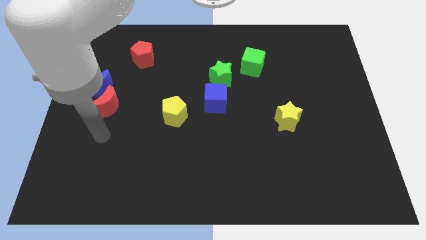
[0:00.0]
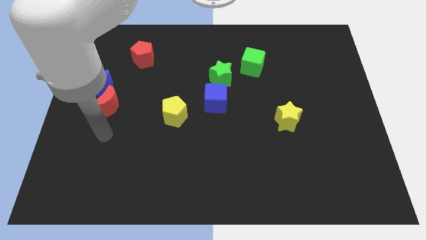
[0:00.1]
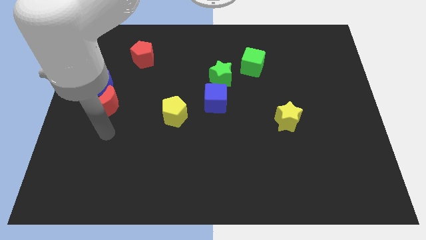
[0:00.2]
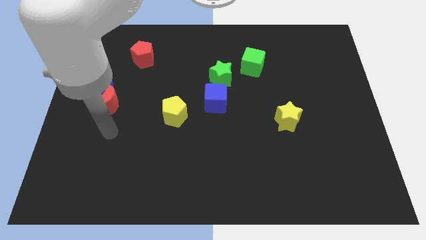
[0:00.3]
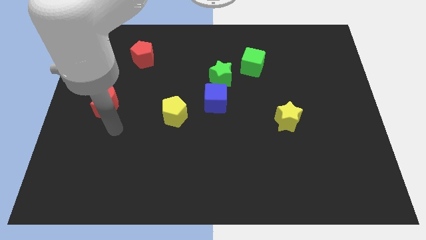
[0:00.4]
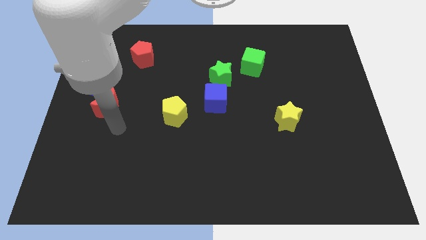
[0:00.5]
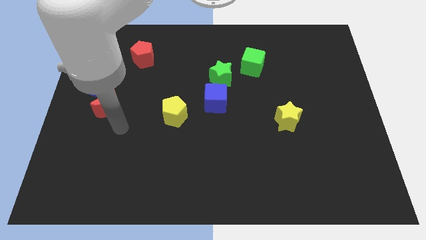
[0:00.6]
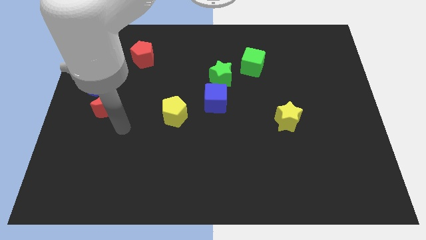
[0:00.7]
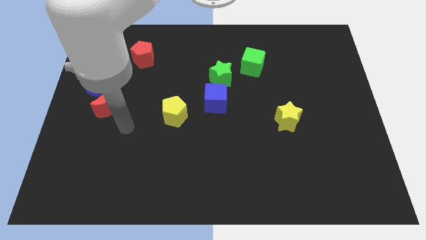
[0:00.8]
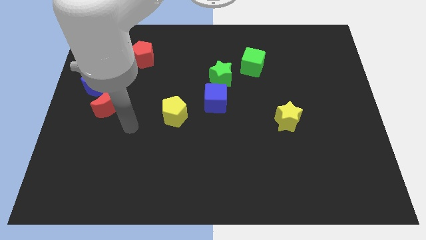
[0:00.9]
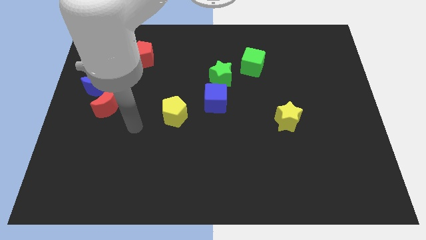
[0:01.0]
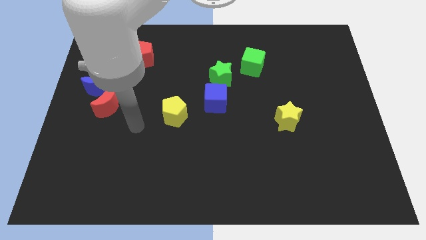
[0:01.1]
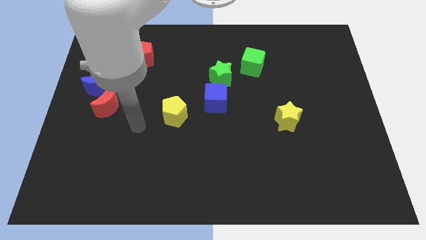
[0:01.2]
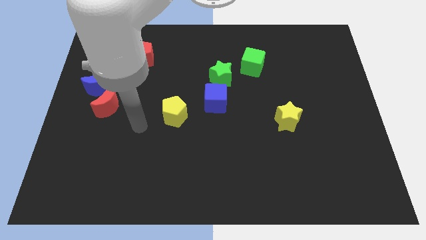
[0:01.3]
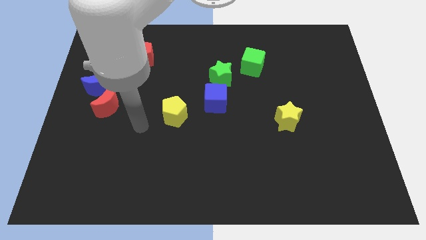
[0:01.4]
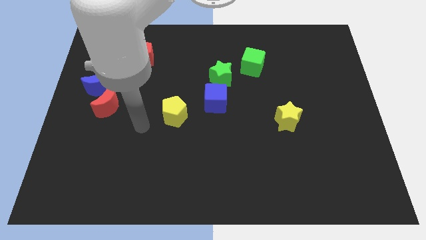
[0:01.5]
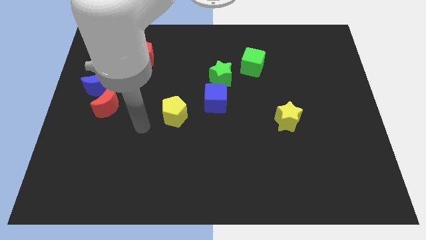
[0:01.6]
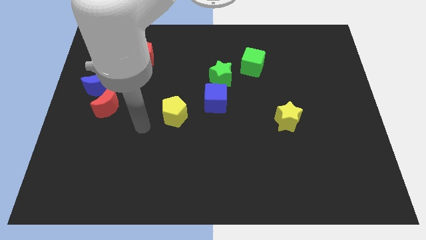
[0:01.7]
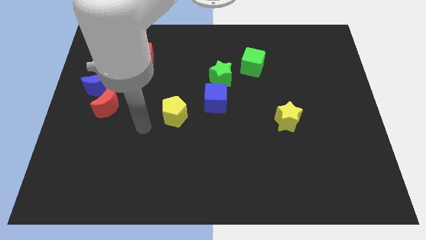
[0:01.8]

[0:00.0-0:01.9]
move the arm towards the yellow pentagon

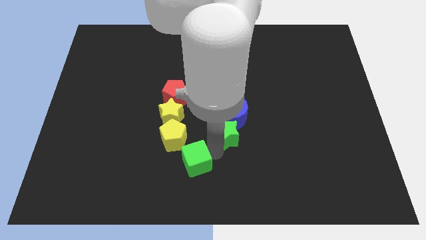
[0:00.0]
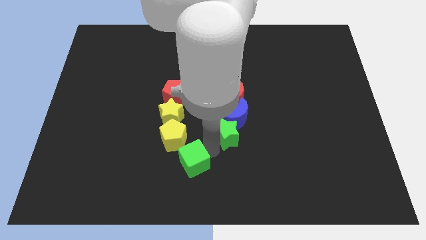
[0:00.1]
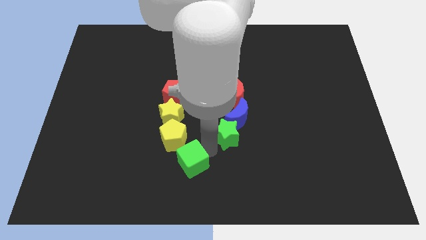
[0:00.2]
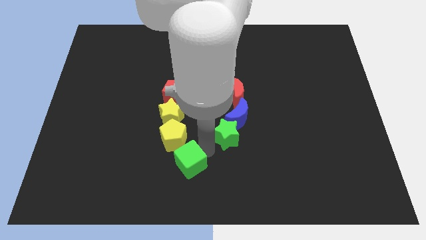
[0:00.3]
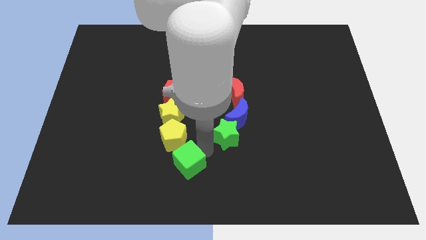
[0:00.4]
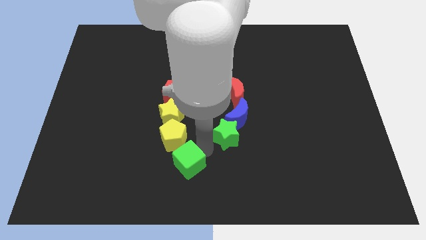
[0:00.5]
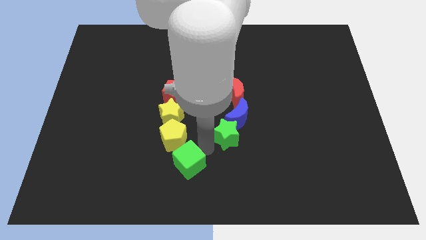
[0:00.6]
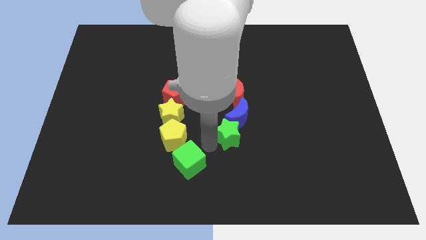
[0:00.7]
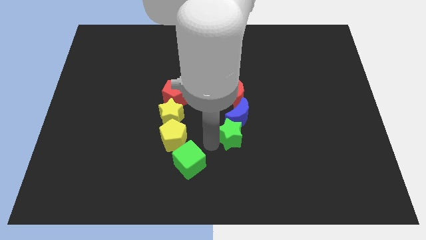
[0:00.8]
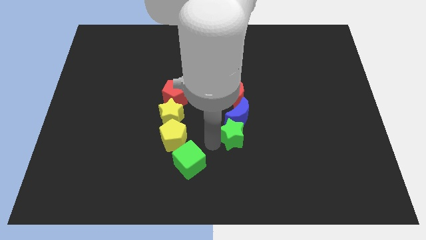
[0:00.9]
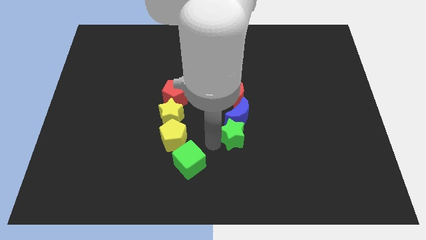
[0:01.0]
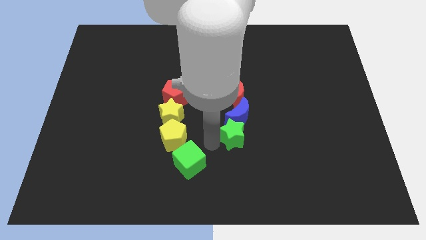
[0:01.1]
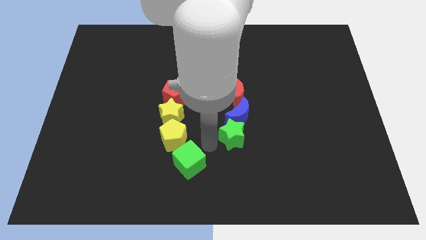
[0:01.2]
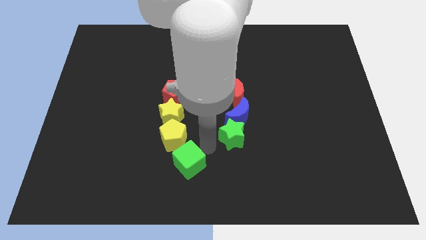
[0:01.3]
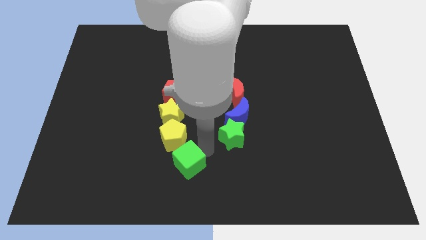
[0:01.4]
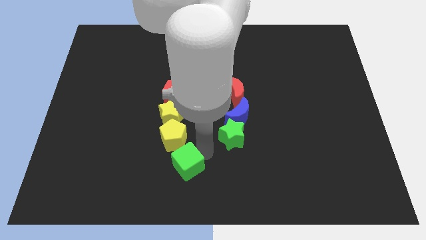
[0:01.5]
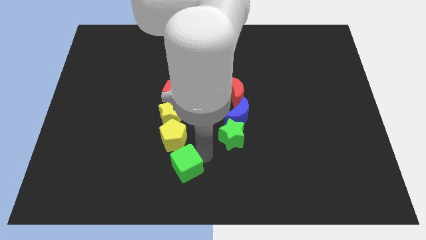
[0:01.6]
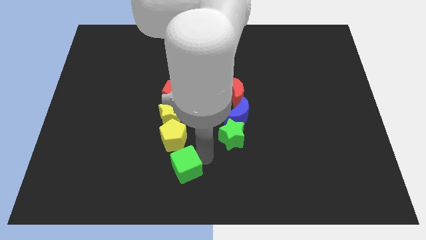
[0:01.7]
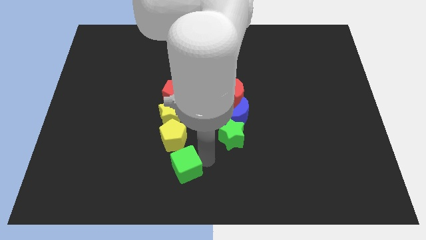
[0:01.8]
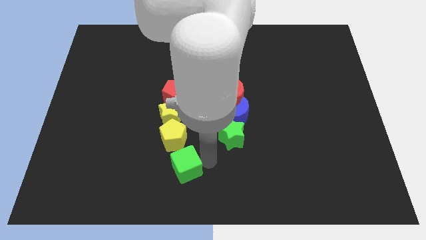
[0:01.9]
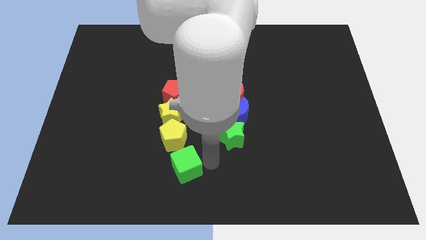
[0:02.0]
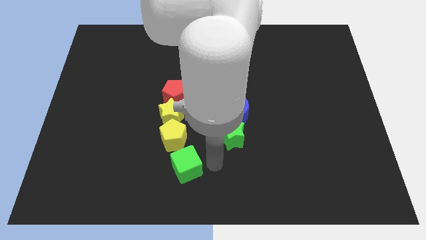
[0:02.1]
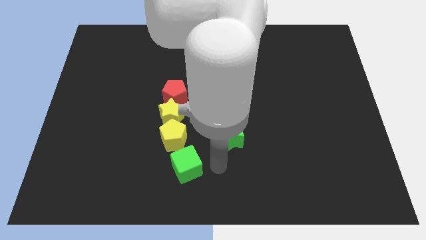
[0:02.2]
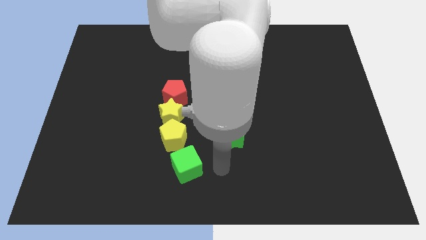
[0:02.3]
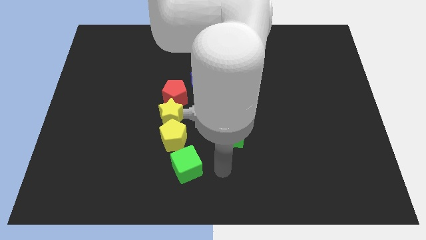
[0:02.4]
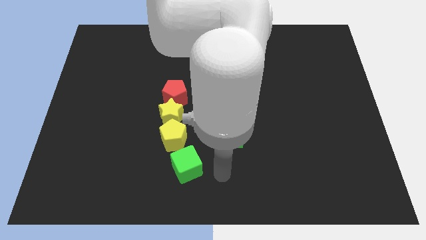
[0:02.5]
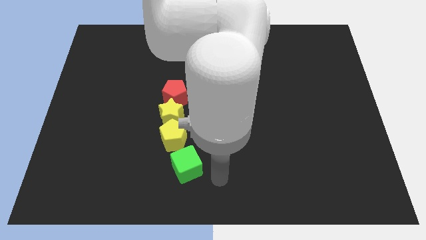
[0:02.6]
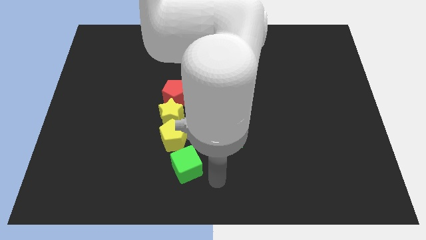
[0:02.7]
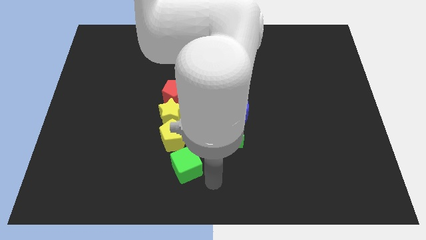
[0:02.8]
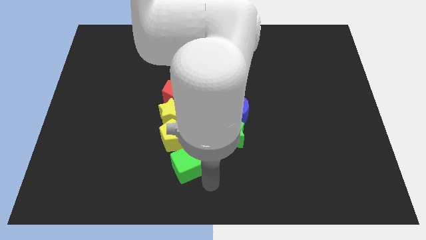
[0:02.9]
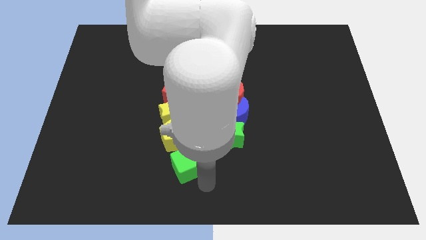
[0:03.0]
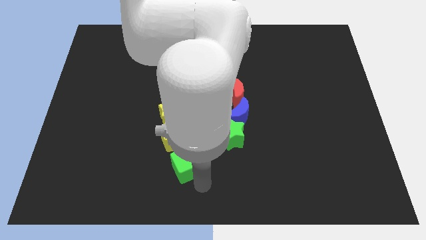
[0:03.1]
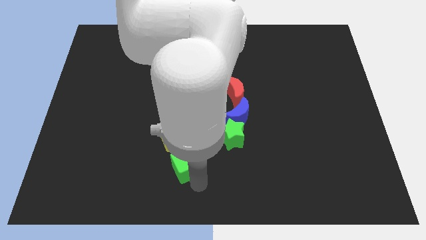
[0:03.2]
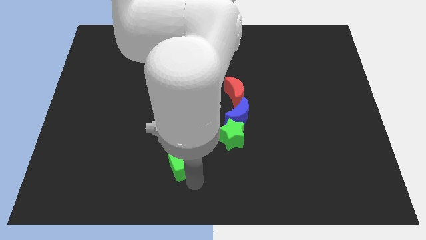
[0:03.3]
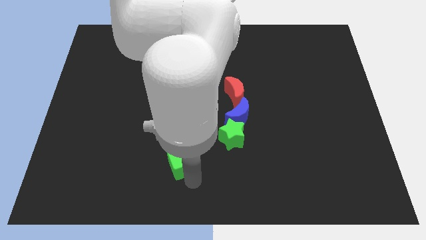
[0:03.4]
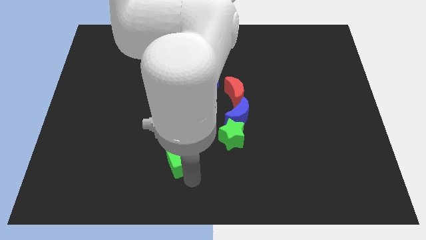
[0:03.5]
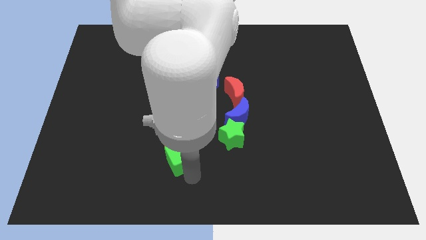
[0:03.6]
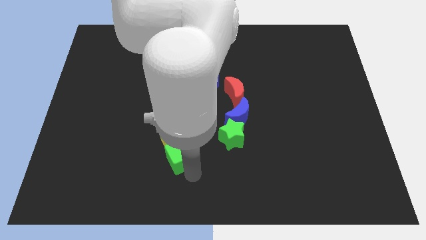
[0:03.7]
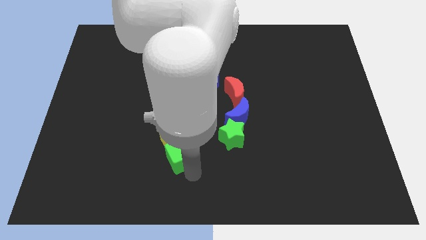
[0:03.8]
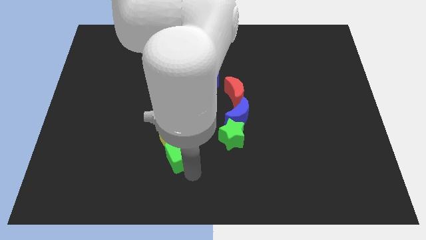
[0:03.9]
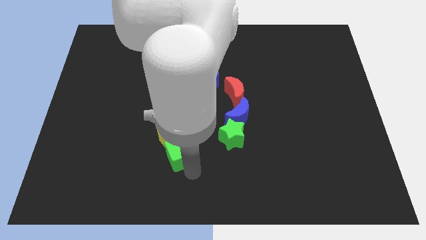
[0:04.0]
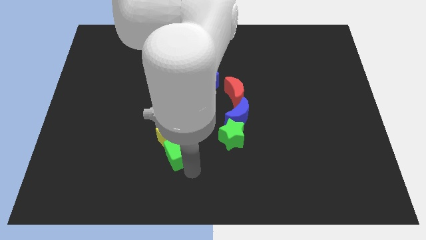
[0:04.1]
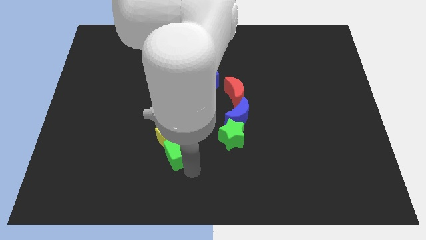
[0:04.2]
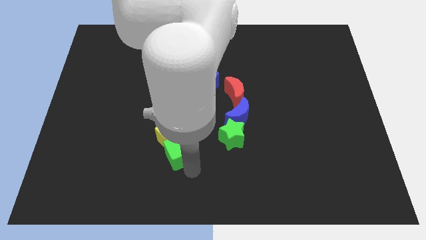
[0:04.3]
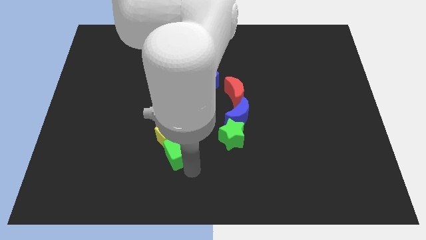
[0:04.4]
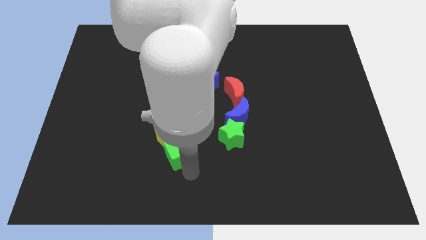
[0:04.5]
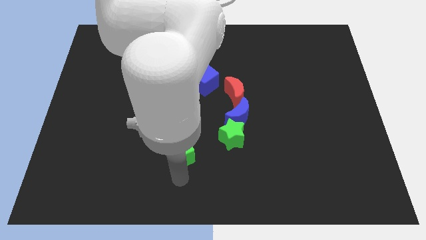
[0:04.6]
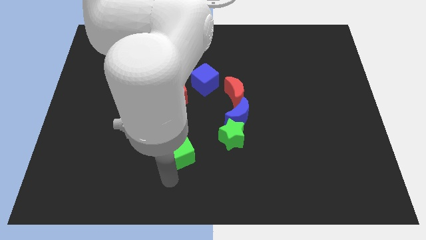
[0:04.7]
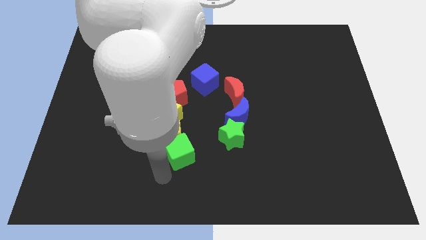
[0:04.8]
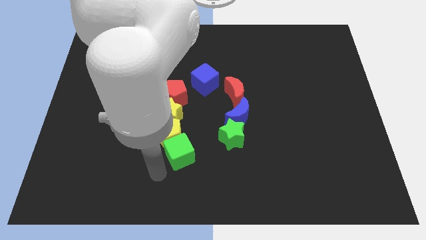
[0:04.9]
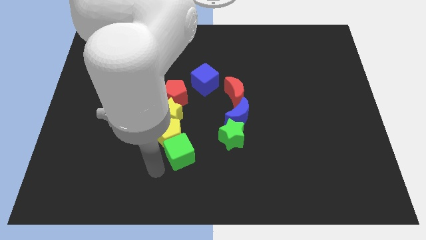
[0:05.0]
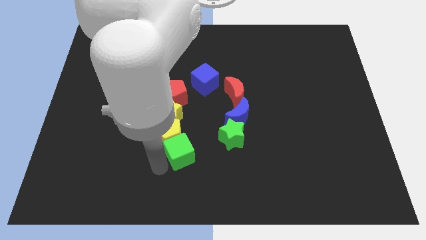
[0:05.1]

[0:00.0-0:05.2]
push the green cube into the yellow pentagon

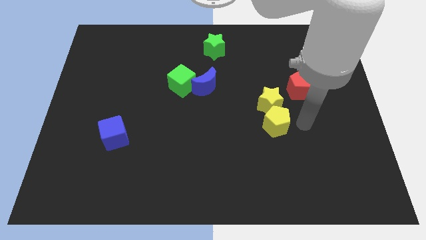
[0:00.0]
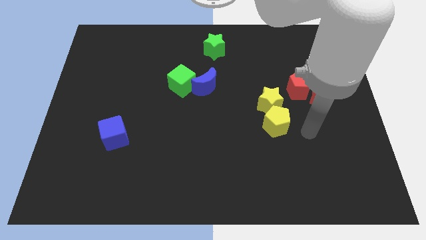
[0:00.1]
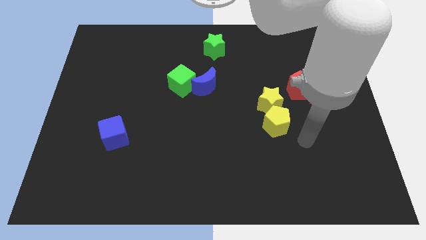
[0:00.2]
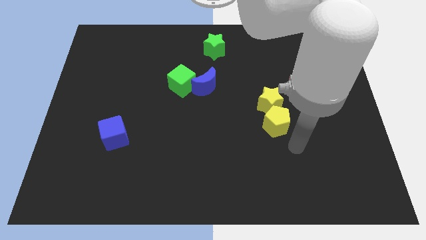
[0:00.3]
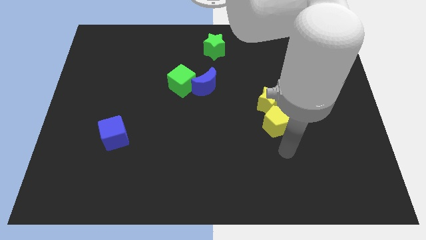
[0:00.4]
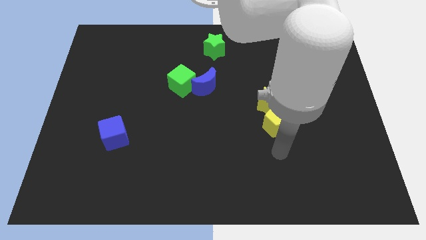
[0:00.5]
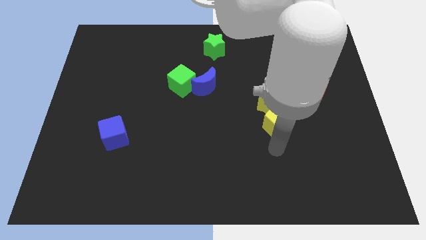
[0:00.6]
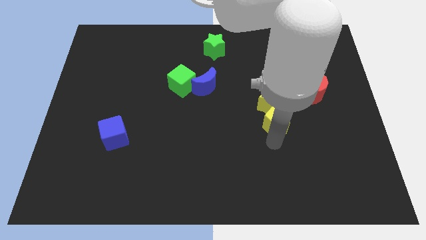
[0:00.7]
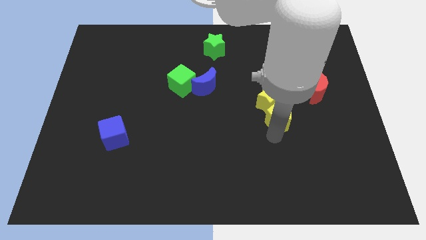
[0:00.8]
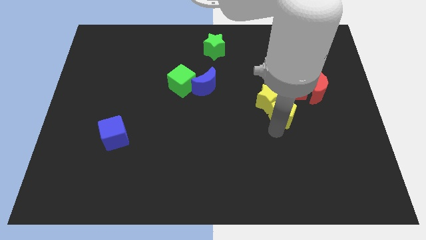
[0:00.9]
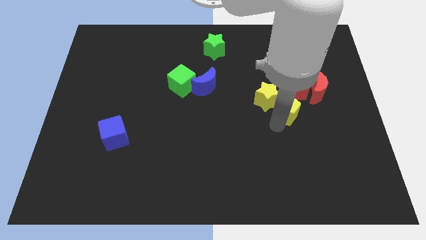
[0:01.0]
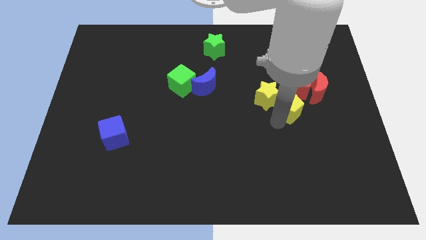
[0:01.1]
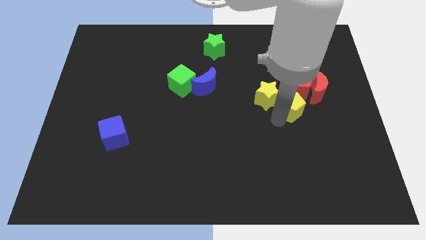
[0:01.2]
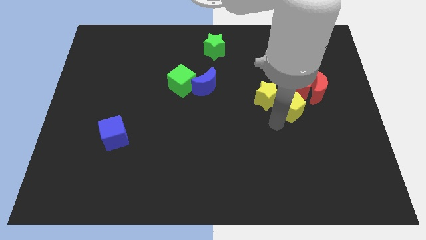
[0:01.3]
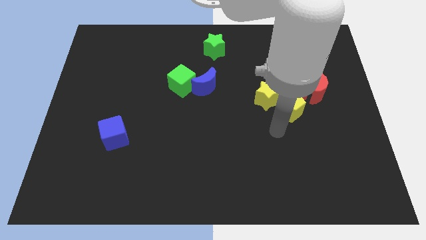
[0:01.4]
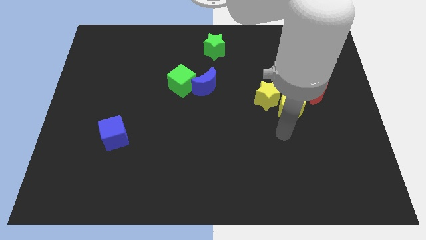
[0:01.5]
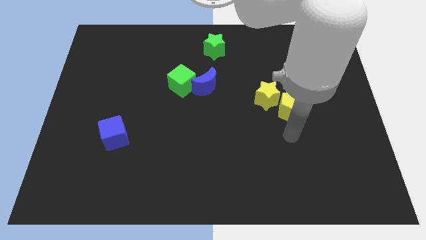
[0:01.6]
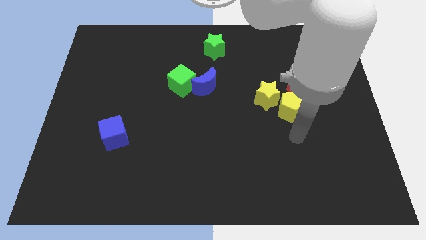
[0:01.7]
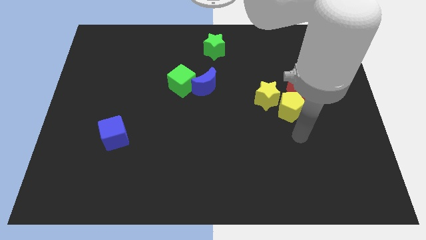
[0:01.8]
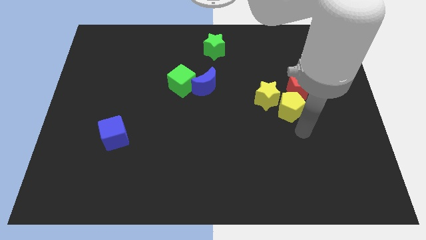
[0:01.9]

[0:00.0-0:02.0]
adjust the yellow pentagon diagonally bottom right to the yellow star
